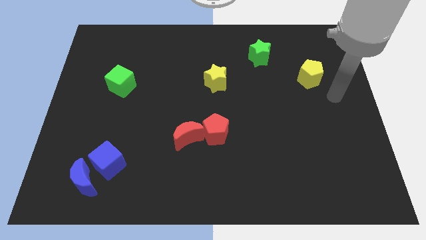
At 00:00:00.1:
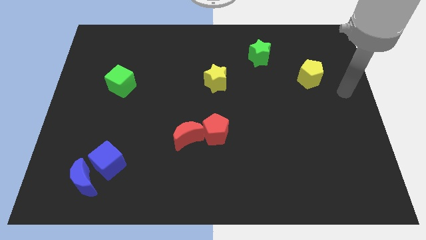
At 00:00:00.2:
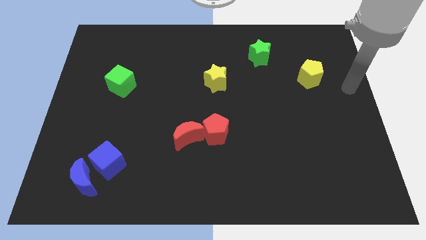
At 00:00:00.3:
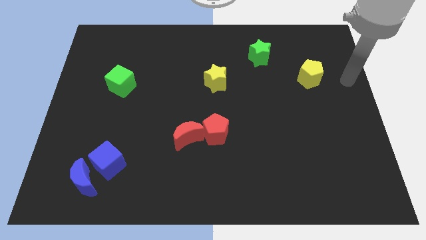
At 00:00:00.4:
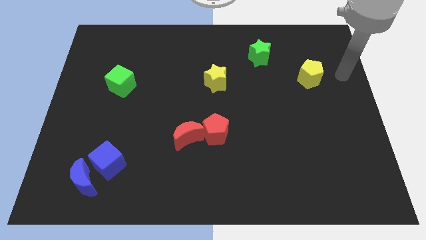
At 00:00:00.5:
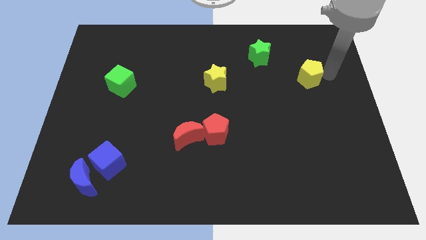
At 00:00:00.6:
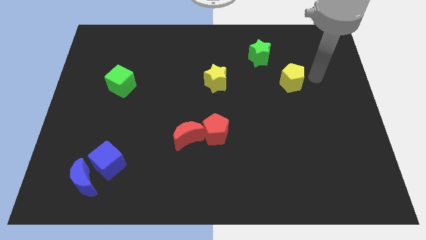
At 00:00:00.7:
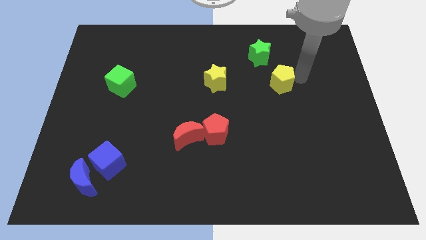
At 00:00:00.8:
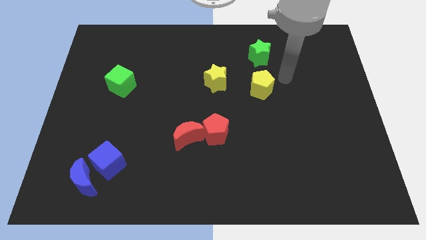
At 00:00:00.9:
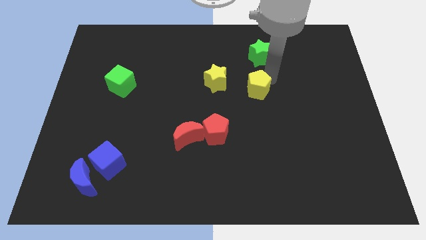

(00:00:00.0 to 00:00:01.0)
put the yellow pentagon below the green star

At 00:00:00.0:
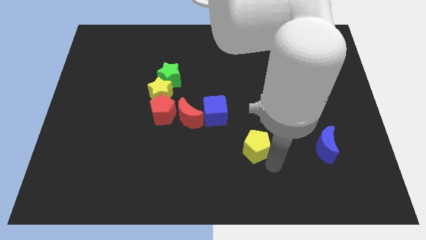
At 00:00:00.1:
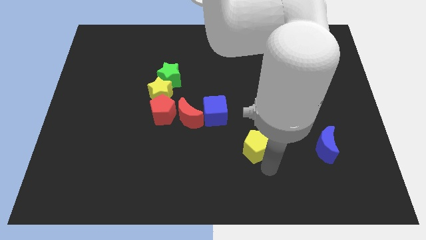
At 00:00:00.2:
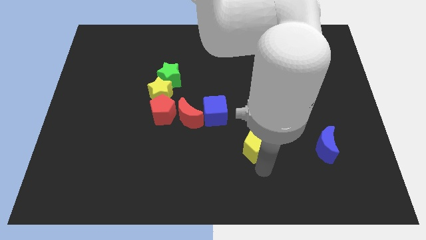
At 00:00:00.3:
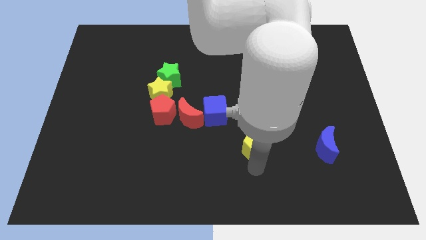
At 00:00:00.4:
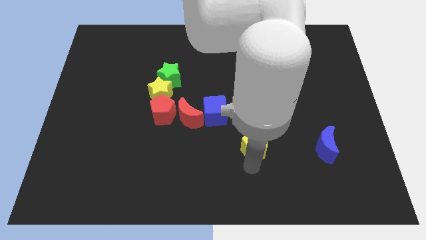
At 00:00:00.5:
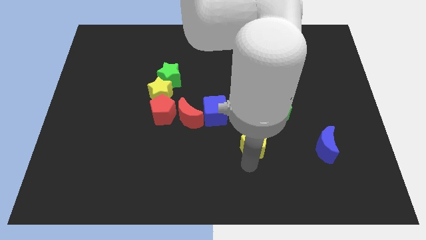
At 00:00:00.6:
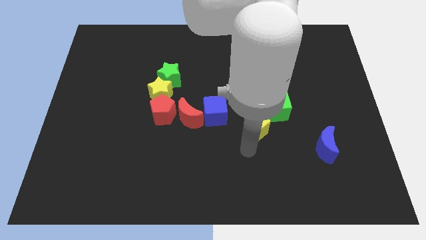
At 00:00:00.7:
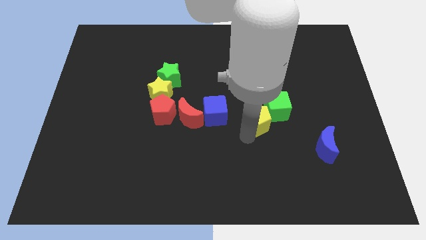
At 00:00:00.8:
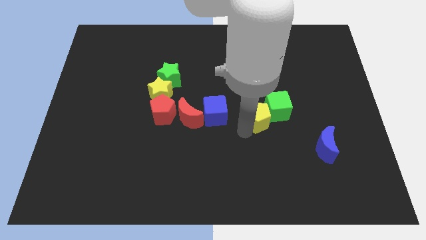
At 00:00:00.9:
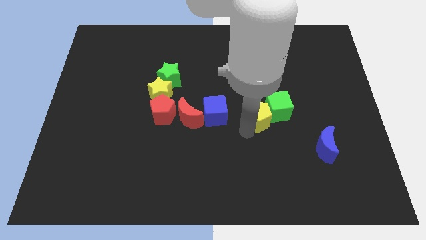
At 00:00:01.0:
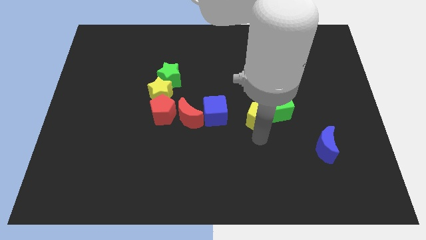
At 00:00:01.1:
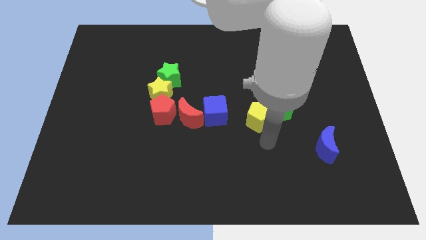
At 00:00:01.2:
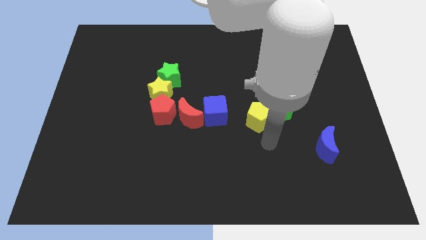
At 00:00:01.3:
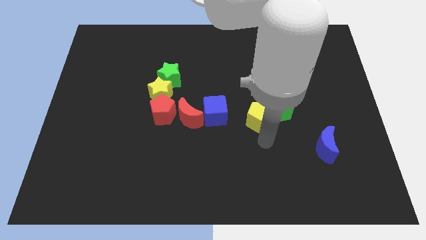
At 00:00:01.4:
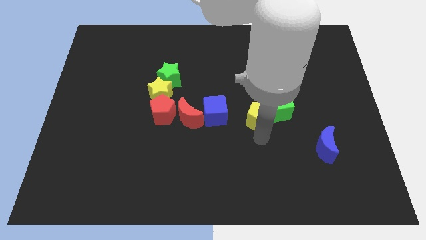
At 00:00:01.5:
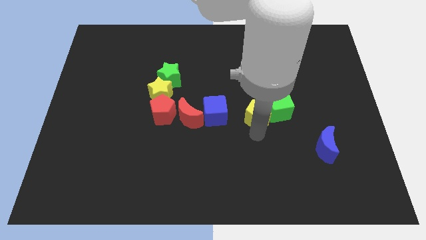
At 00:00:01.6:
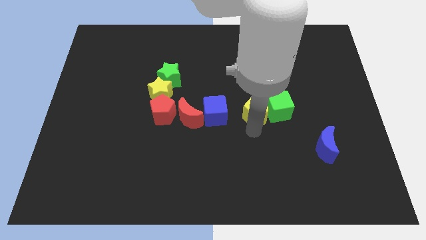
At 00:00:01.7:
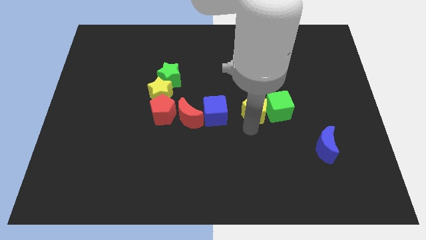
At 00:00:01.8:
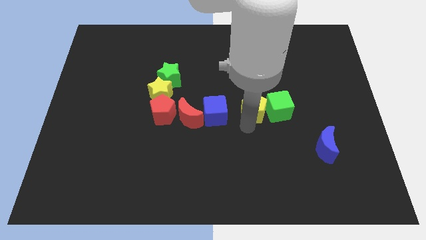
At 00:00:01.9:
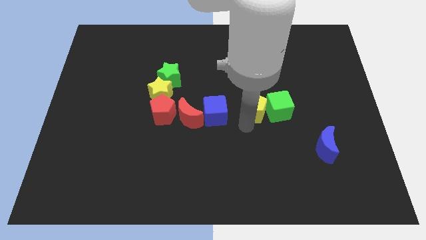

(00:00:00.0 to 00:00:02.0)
drag the yellow pentagon into the left side of the green cube

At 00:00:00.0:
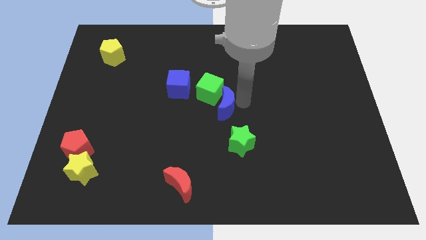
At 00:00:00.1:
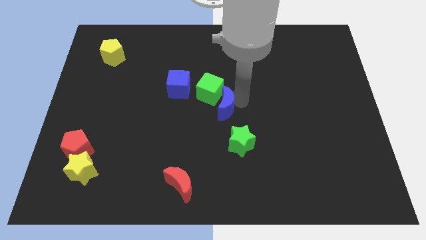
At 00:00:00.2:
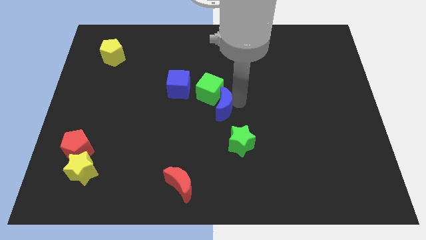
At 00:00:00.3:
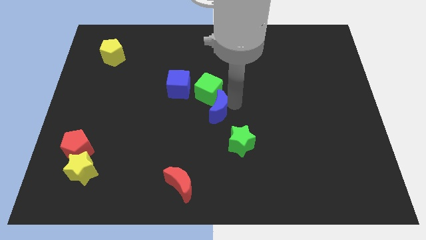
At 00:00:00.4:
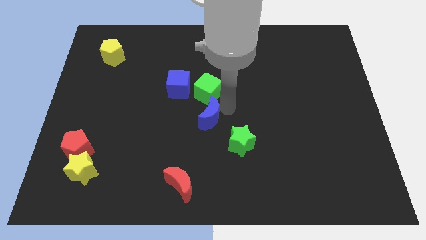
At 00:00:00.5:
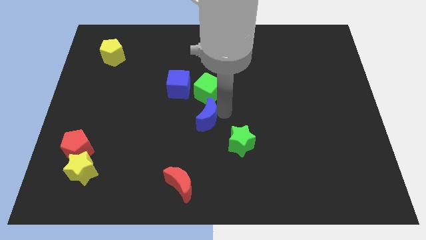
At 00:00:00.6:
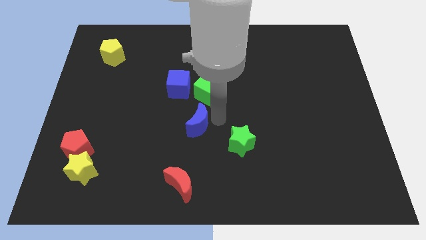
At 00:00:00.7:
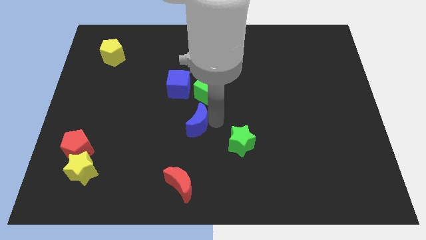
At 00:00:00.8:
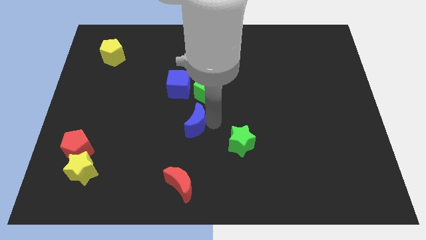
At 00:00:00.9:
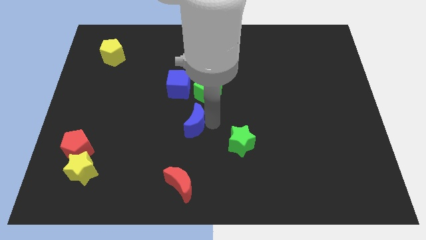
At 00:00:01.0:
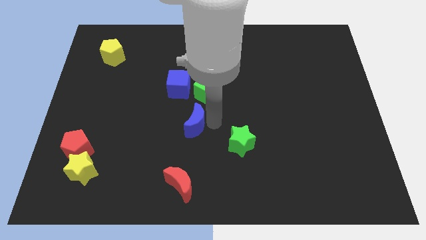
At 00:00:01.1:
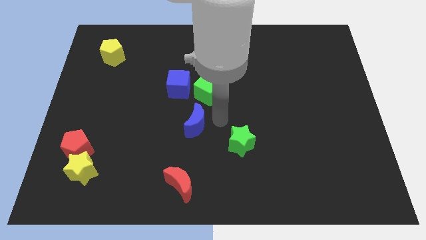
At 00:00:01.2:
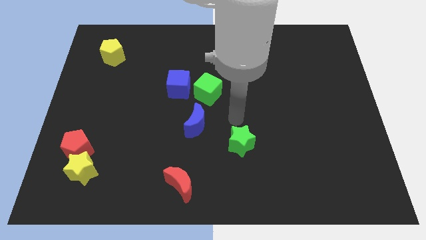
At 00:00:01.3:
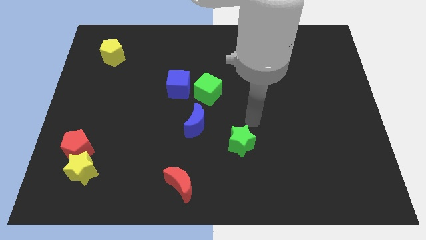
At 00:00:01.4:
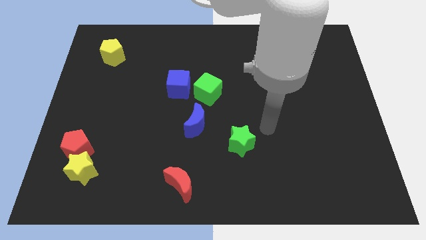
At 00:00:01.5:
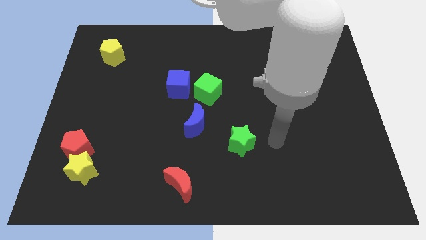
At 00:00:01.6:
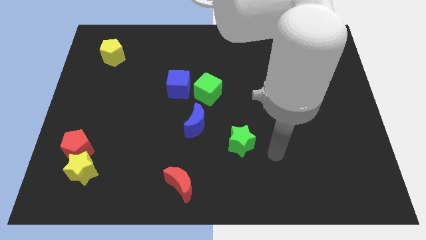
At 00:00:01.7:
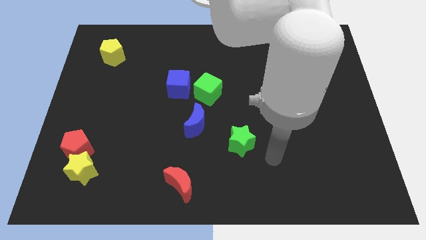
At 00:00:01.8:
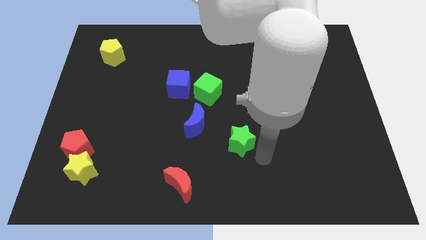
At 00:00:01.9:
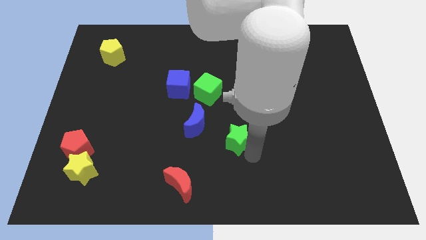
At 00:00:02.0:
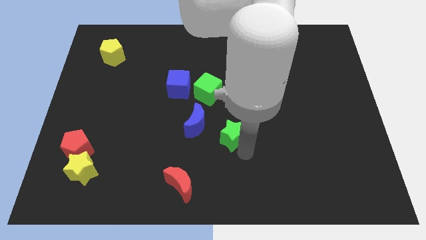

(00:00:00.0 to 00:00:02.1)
move the blue crescent at the bottom of the green cube

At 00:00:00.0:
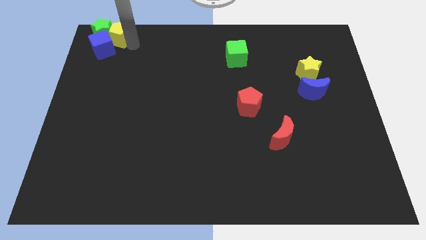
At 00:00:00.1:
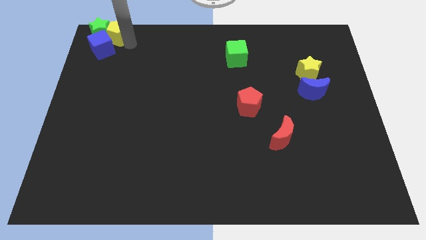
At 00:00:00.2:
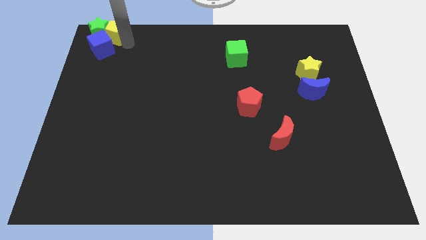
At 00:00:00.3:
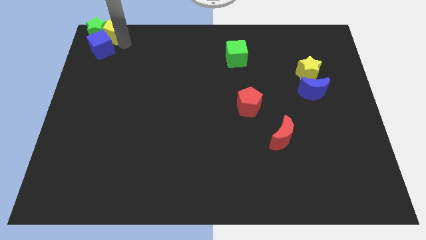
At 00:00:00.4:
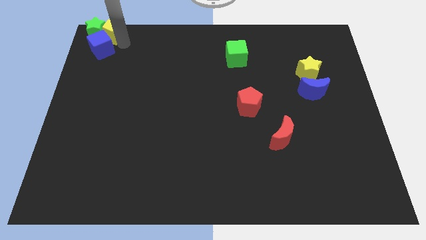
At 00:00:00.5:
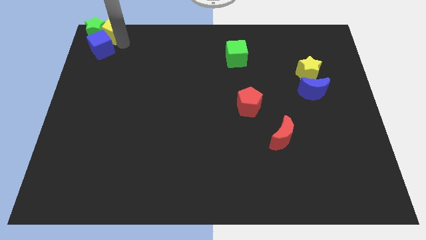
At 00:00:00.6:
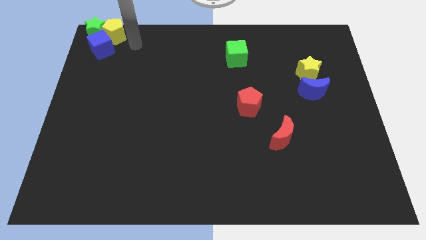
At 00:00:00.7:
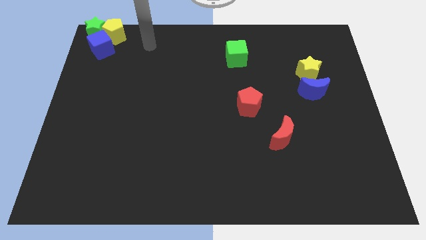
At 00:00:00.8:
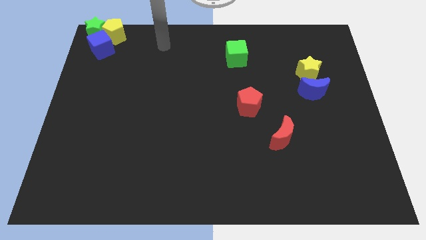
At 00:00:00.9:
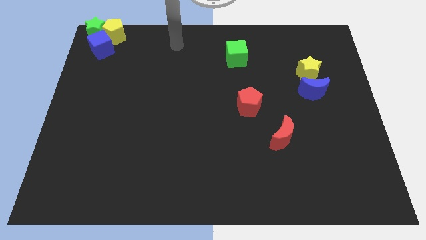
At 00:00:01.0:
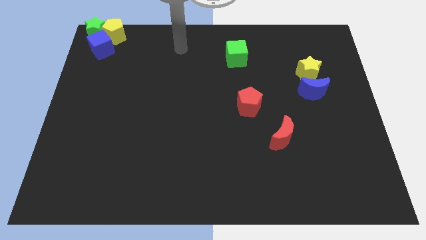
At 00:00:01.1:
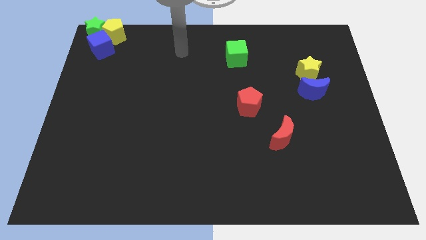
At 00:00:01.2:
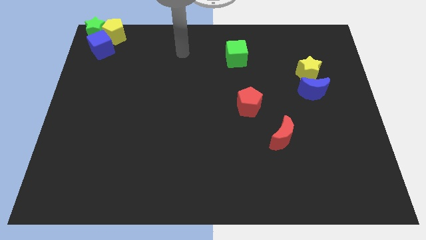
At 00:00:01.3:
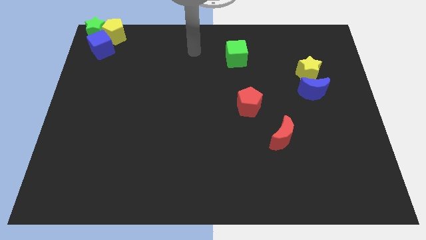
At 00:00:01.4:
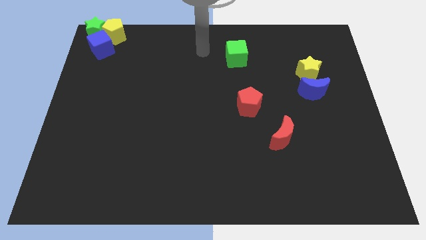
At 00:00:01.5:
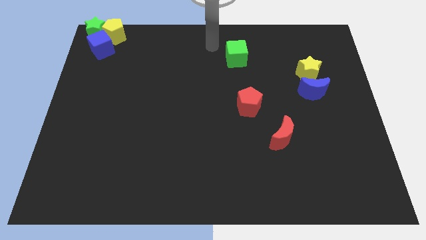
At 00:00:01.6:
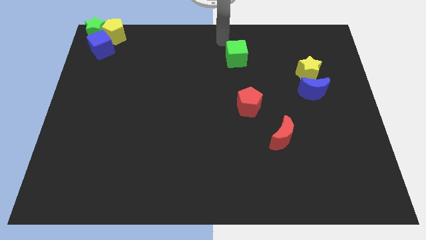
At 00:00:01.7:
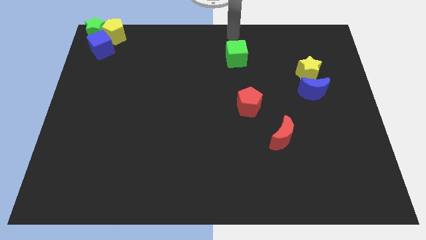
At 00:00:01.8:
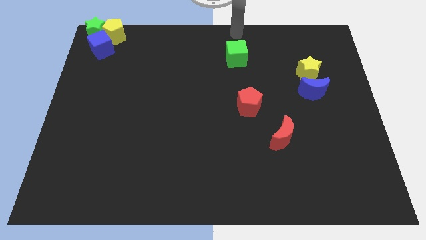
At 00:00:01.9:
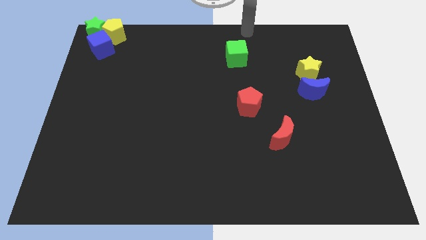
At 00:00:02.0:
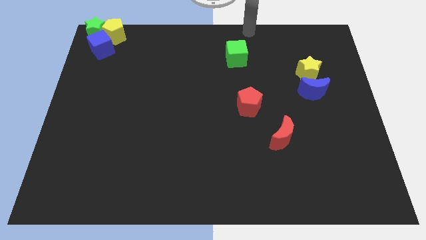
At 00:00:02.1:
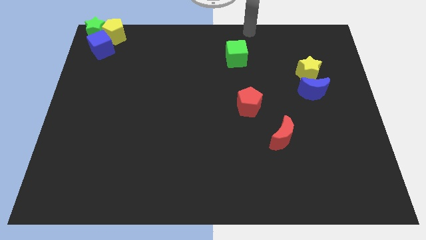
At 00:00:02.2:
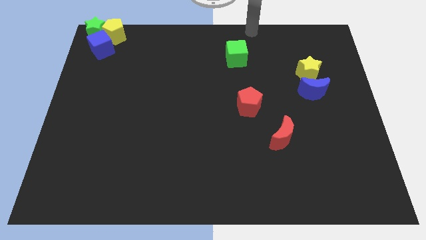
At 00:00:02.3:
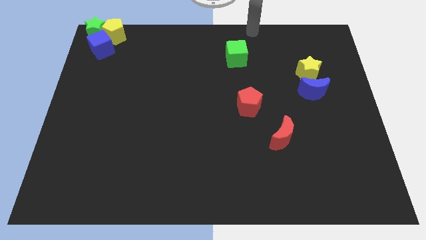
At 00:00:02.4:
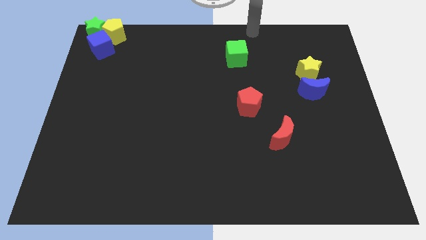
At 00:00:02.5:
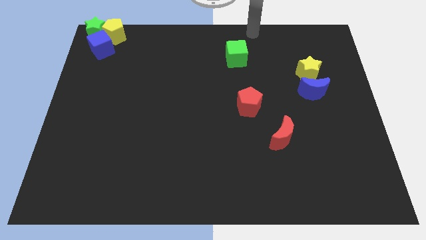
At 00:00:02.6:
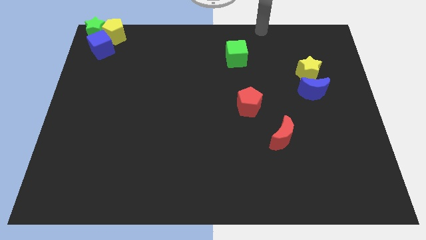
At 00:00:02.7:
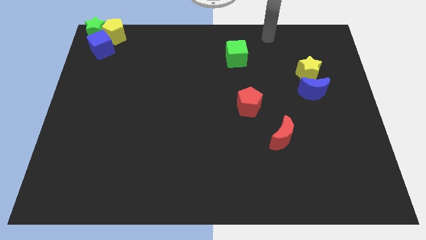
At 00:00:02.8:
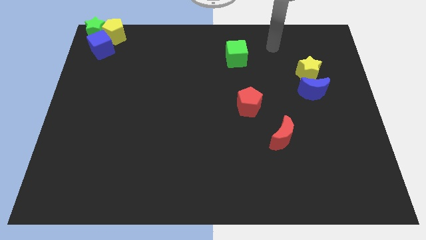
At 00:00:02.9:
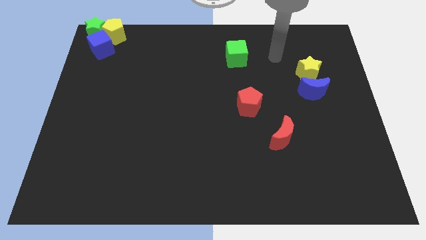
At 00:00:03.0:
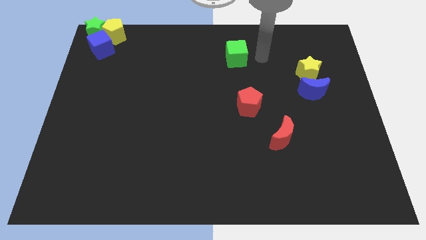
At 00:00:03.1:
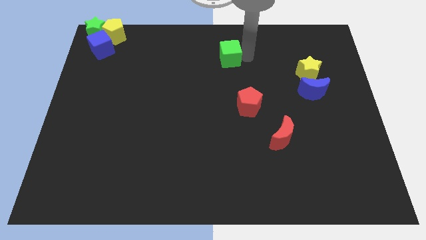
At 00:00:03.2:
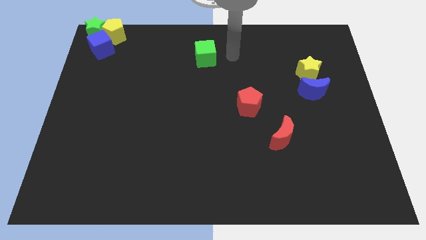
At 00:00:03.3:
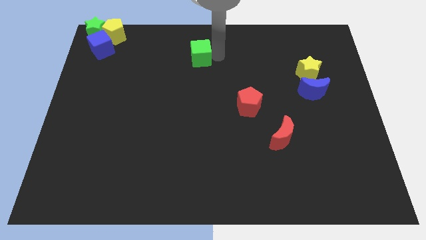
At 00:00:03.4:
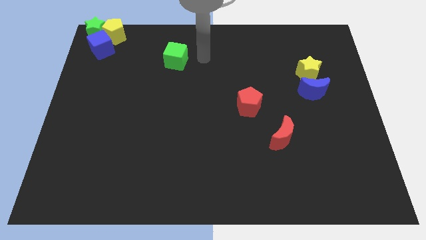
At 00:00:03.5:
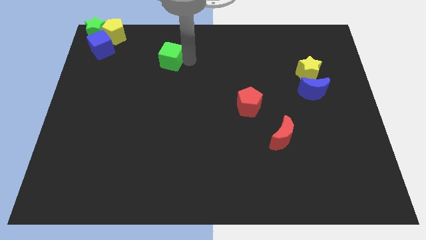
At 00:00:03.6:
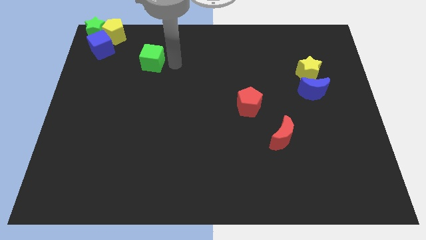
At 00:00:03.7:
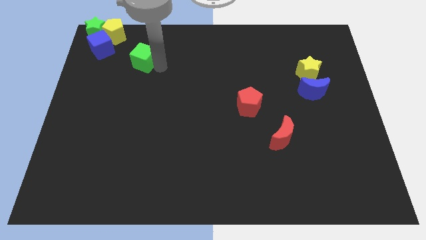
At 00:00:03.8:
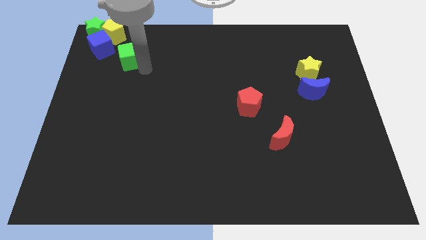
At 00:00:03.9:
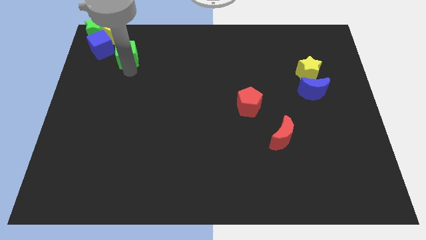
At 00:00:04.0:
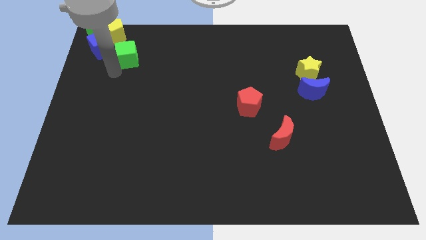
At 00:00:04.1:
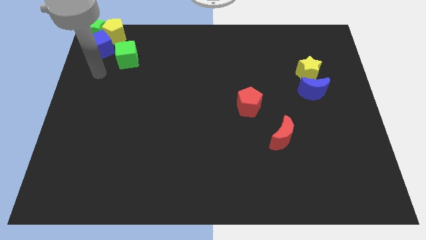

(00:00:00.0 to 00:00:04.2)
move the green cube towards the left
